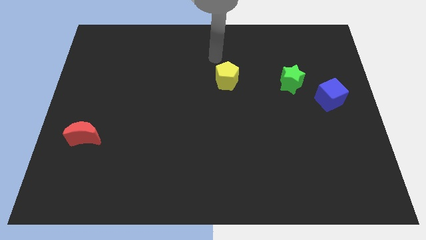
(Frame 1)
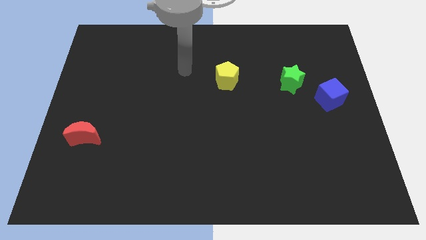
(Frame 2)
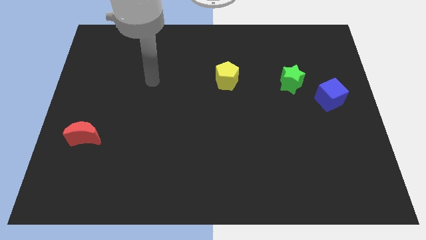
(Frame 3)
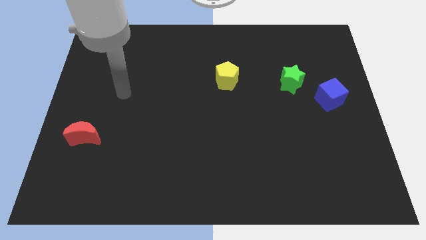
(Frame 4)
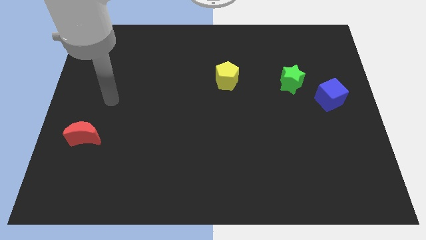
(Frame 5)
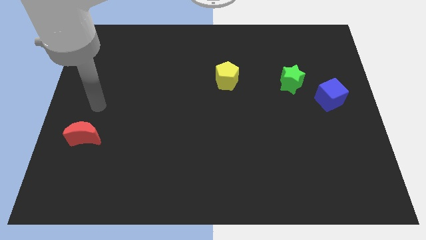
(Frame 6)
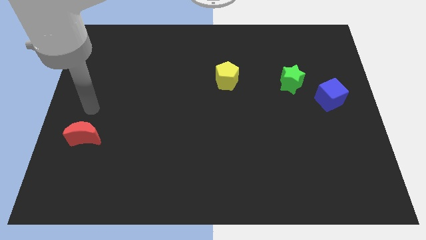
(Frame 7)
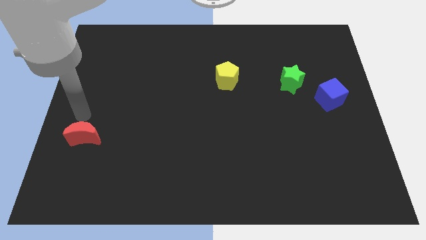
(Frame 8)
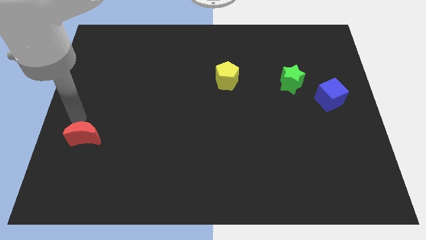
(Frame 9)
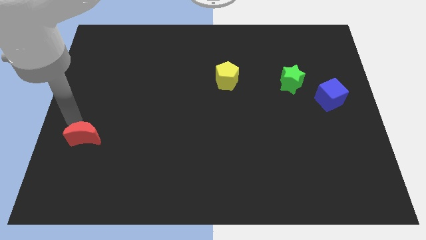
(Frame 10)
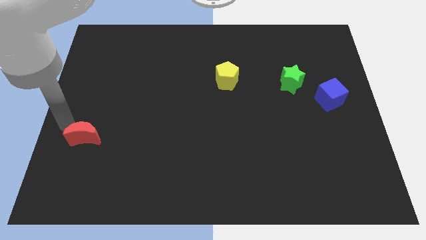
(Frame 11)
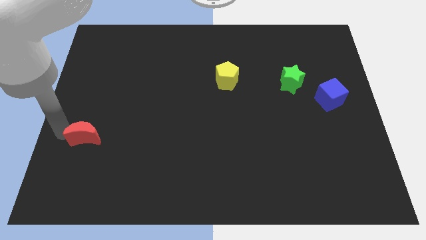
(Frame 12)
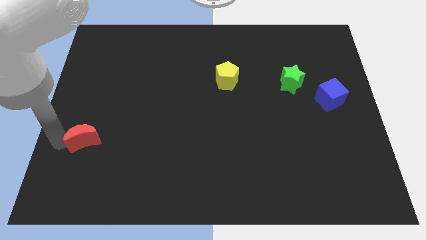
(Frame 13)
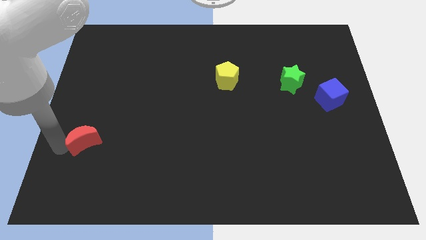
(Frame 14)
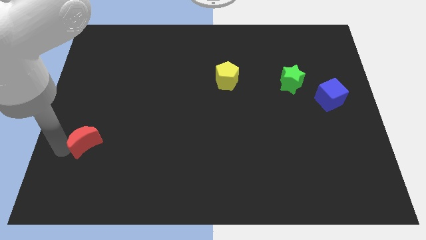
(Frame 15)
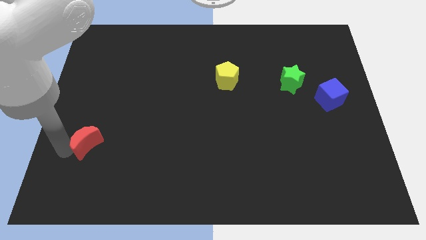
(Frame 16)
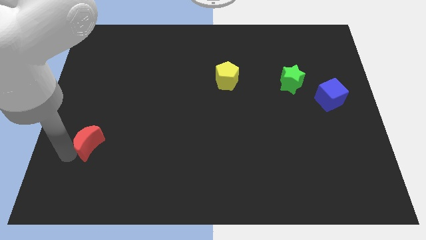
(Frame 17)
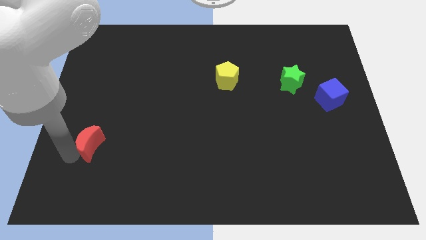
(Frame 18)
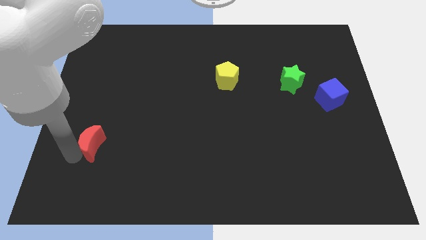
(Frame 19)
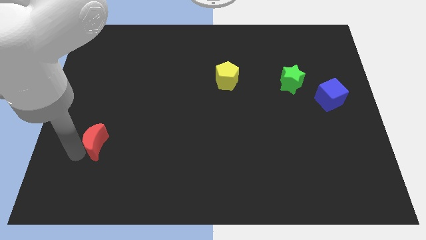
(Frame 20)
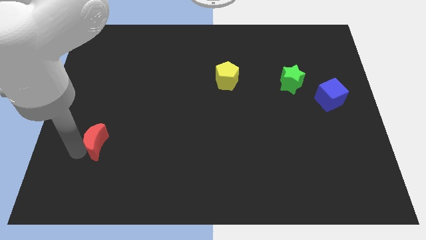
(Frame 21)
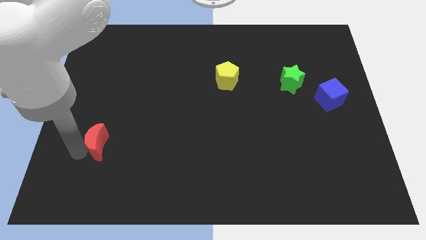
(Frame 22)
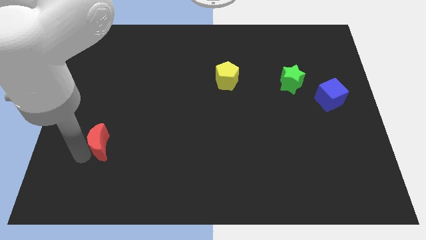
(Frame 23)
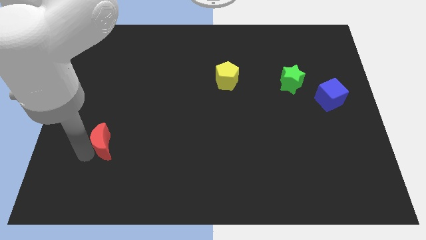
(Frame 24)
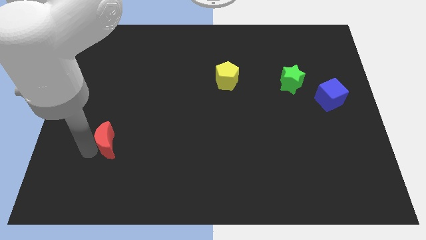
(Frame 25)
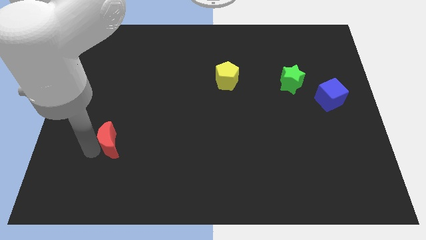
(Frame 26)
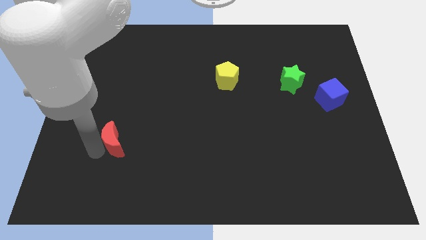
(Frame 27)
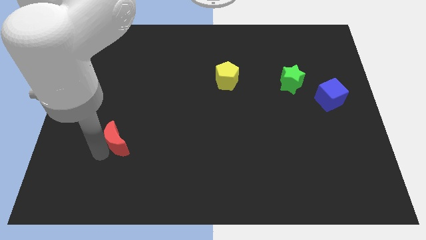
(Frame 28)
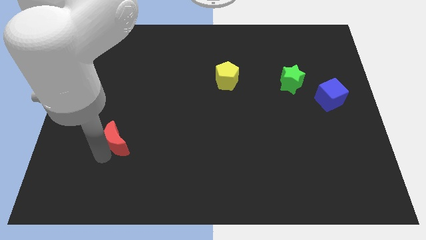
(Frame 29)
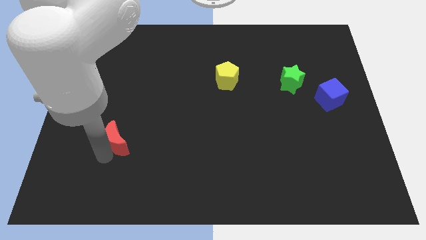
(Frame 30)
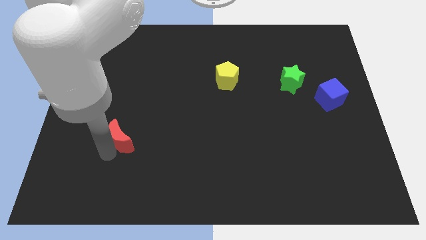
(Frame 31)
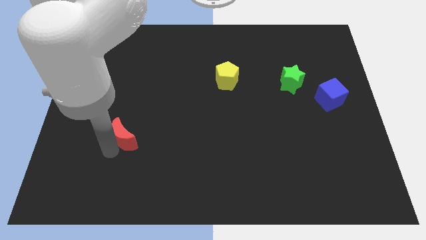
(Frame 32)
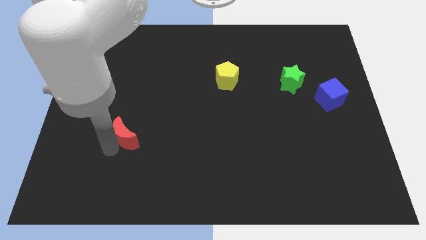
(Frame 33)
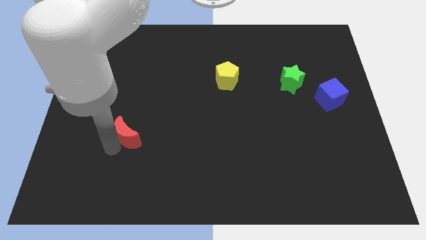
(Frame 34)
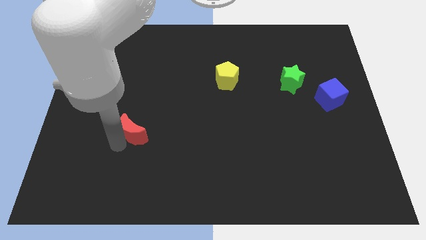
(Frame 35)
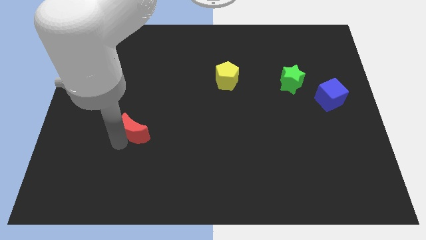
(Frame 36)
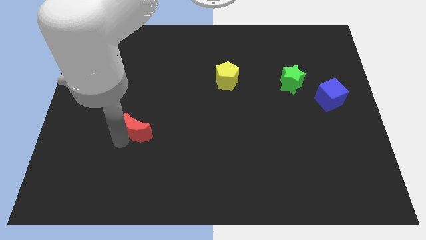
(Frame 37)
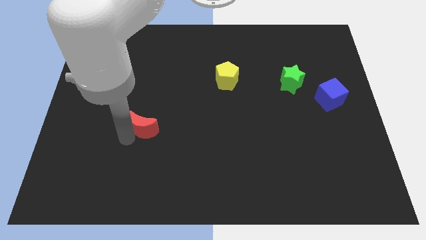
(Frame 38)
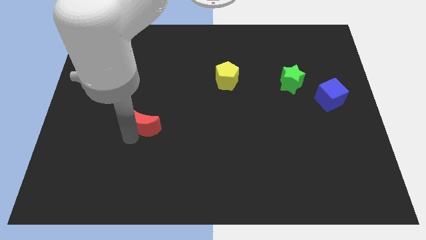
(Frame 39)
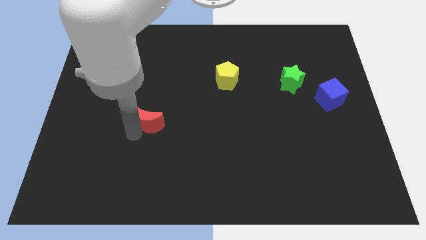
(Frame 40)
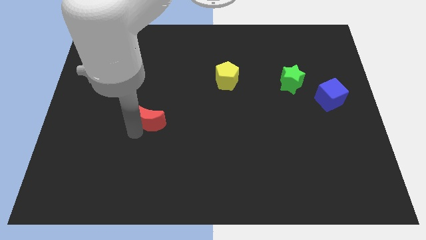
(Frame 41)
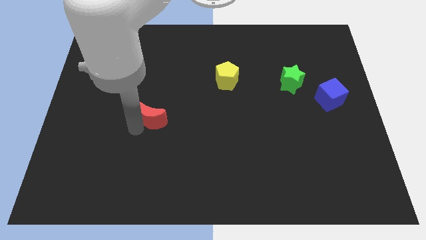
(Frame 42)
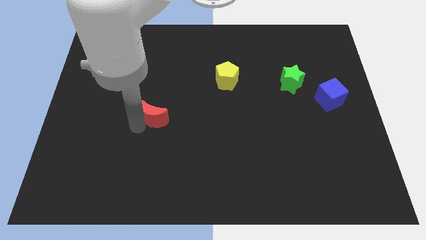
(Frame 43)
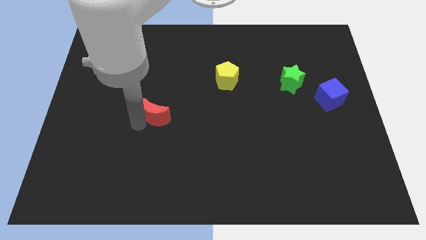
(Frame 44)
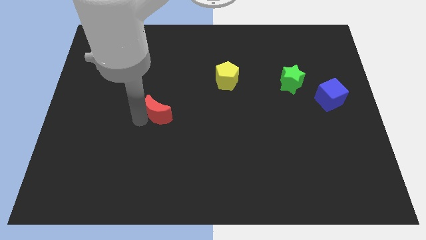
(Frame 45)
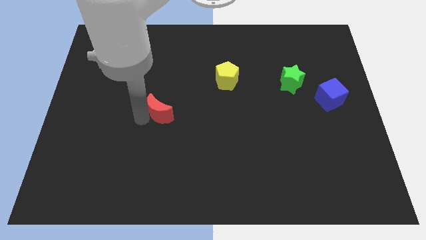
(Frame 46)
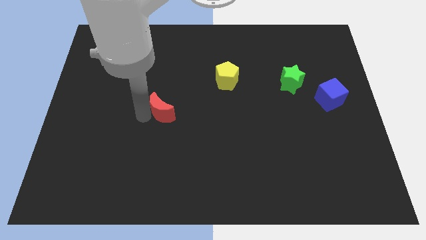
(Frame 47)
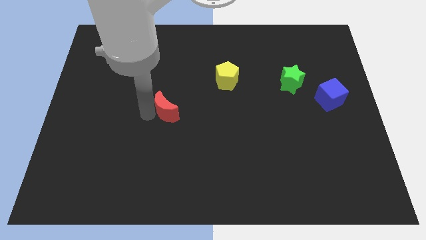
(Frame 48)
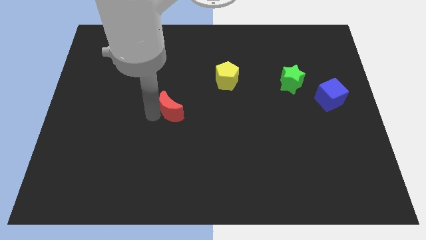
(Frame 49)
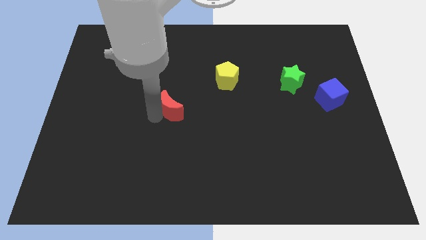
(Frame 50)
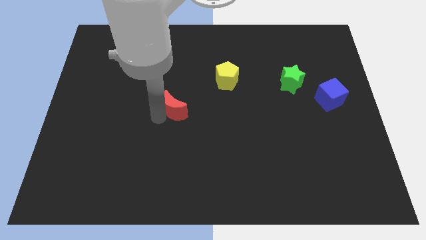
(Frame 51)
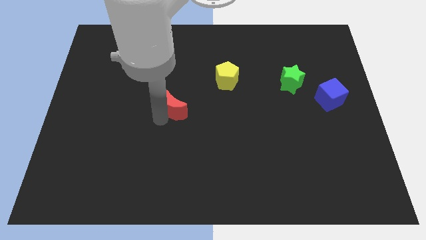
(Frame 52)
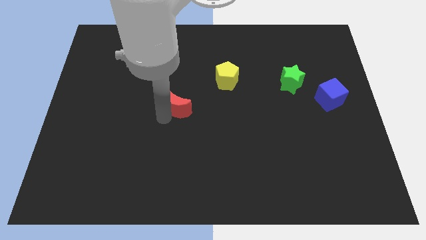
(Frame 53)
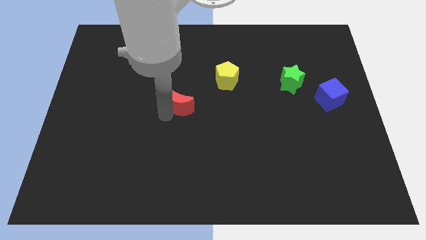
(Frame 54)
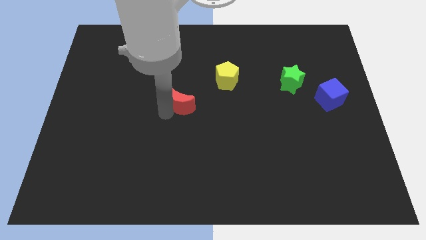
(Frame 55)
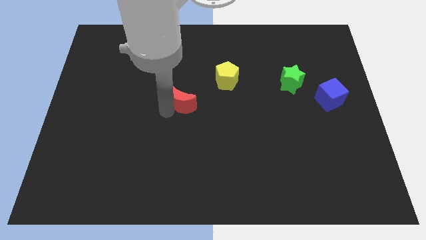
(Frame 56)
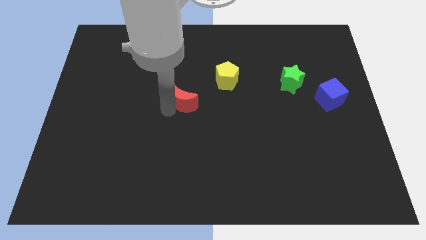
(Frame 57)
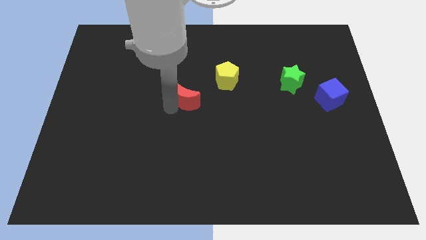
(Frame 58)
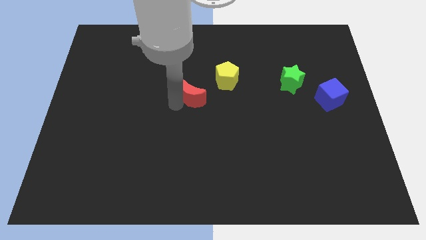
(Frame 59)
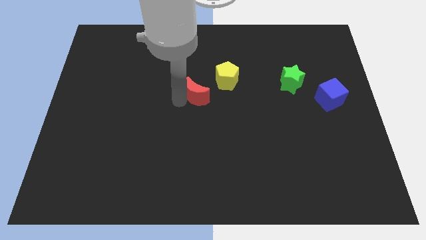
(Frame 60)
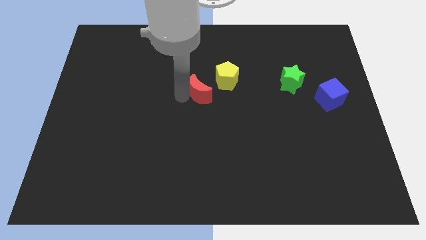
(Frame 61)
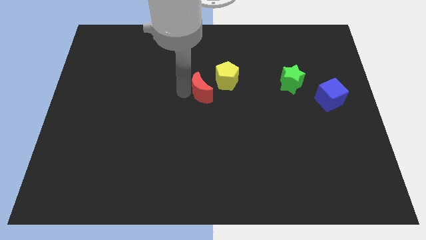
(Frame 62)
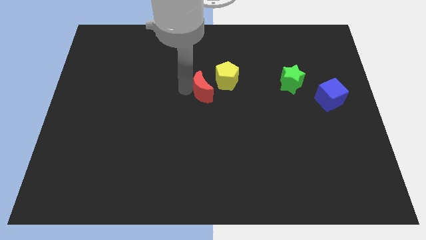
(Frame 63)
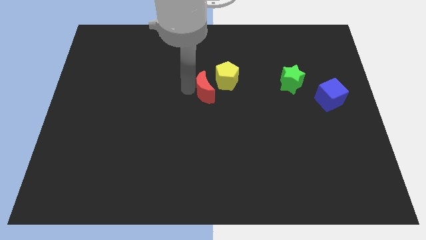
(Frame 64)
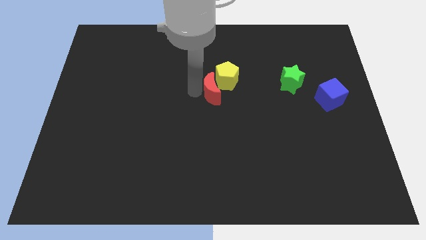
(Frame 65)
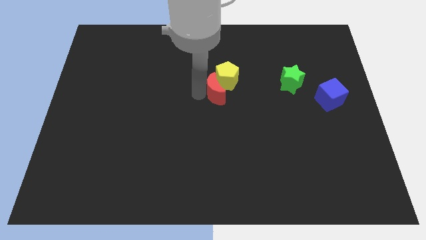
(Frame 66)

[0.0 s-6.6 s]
put the red moon towards the pentagon

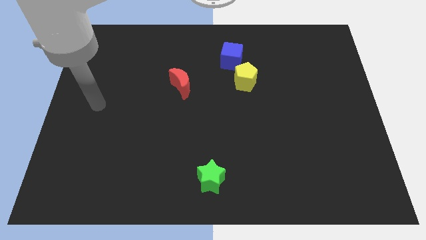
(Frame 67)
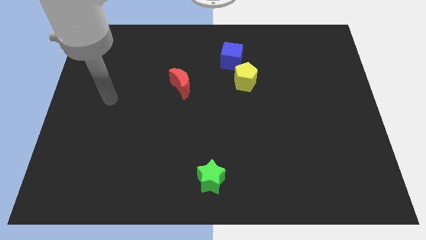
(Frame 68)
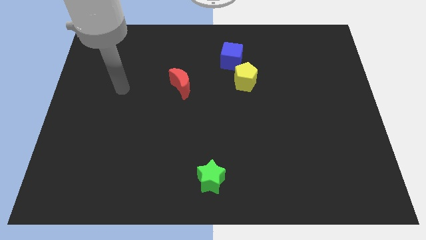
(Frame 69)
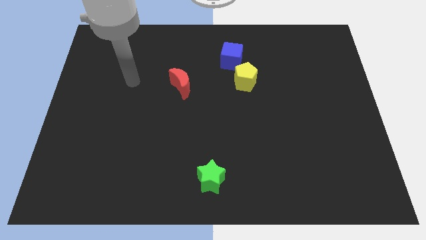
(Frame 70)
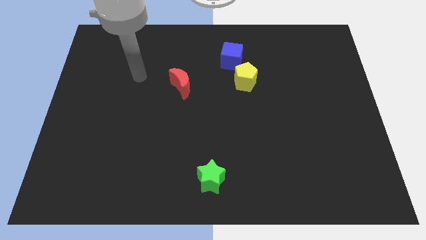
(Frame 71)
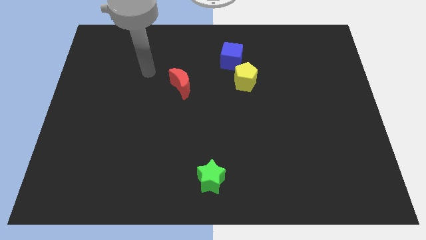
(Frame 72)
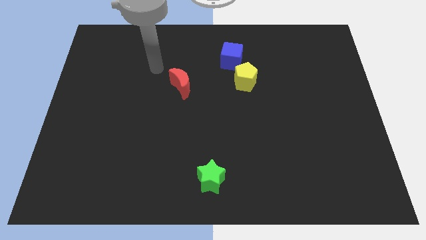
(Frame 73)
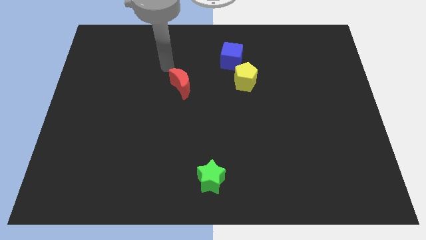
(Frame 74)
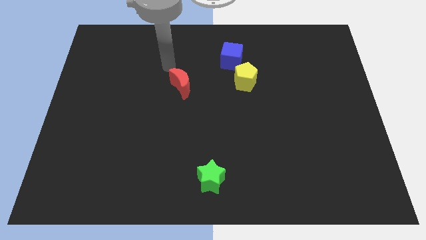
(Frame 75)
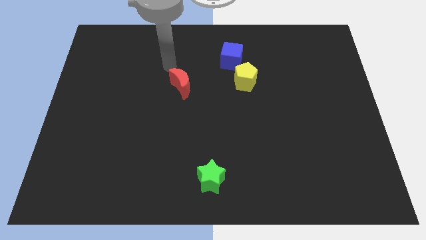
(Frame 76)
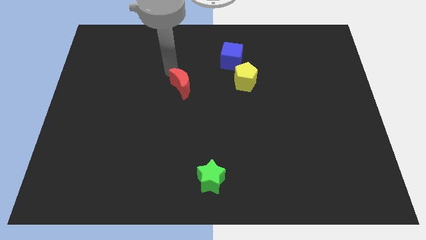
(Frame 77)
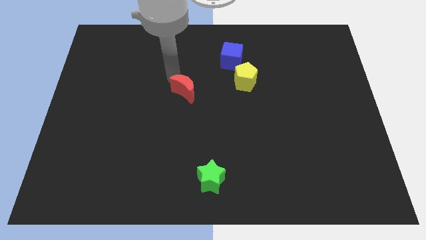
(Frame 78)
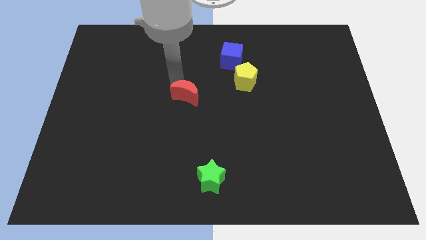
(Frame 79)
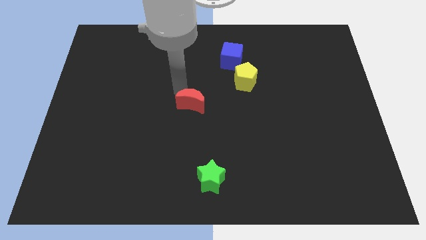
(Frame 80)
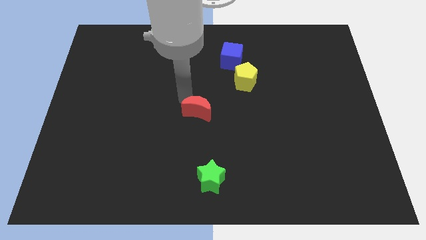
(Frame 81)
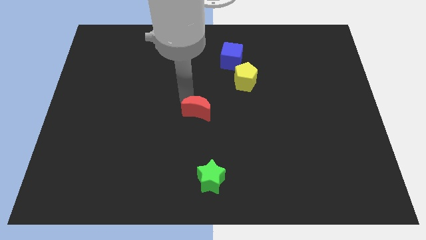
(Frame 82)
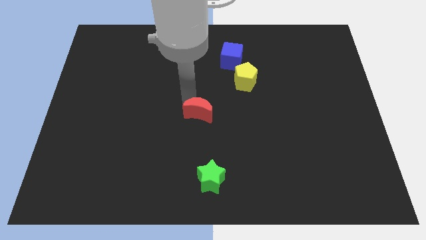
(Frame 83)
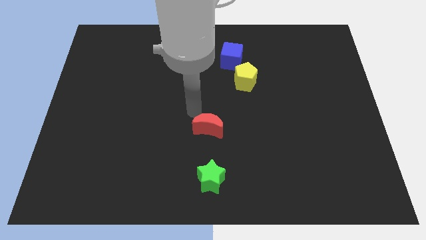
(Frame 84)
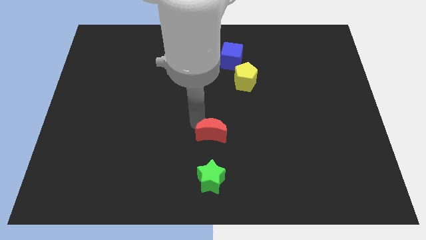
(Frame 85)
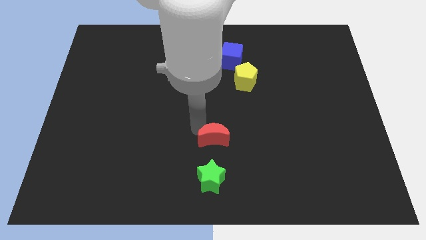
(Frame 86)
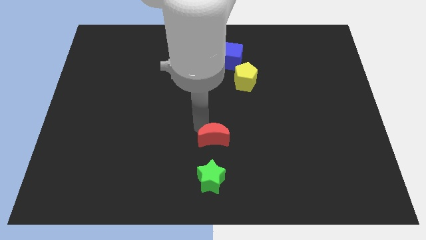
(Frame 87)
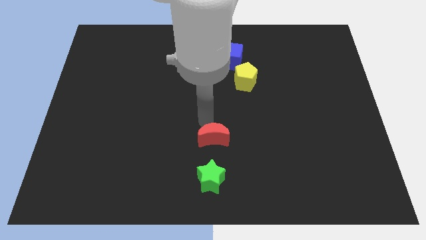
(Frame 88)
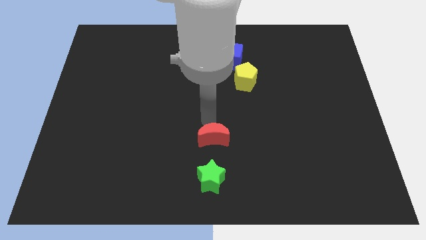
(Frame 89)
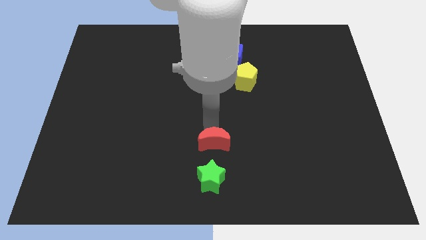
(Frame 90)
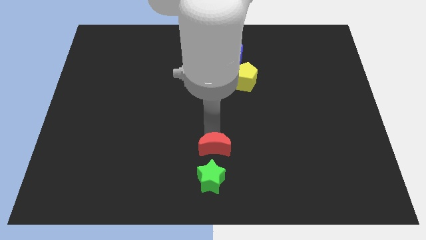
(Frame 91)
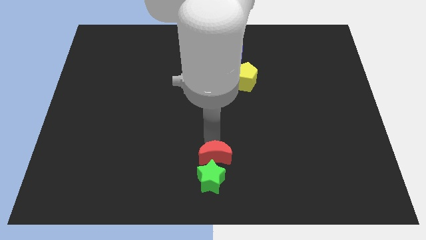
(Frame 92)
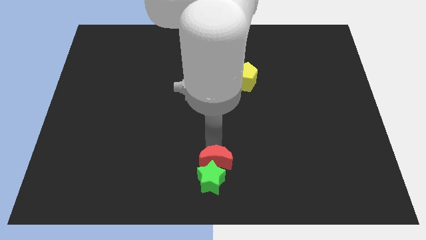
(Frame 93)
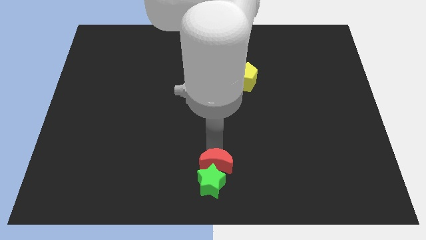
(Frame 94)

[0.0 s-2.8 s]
push the red moon close to the green block
